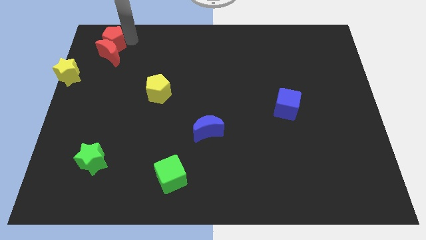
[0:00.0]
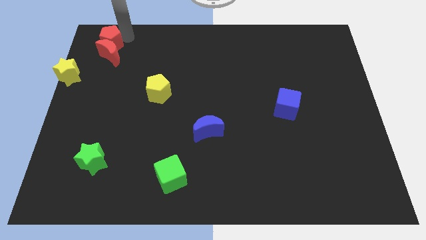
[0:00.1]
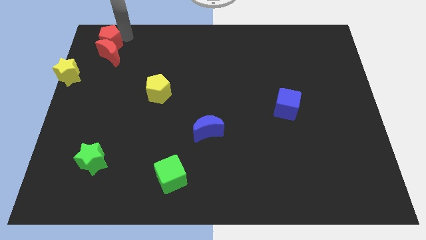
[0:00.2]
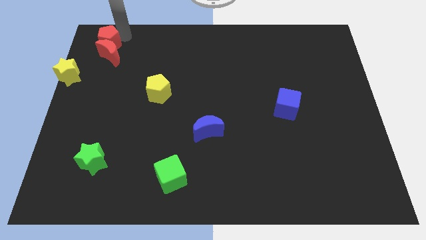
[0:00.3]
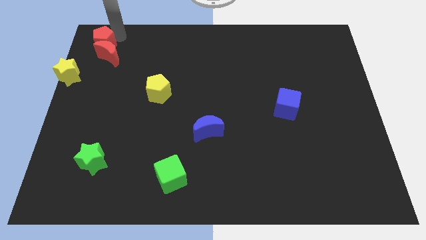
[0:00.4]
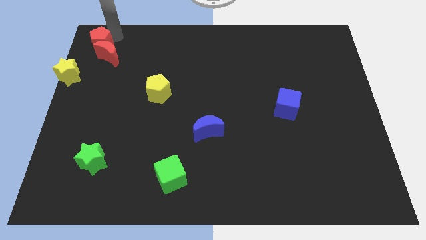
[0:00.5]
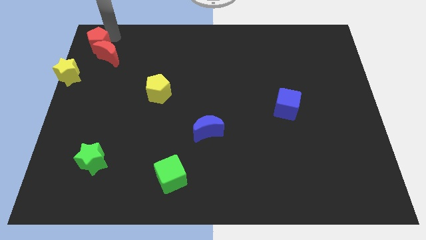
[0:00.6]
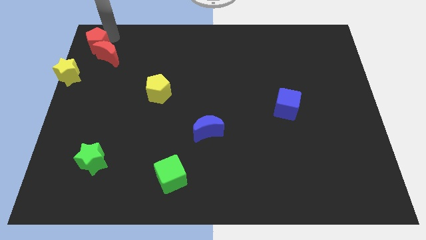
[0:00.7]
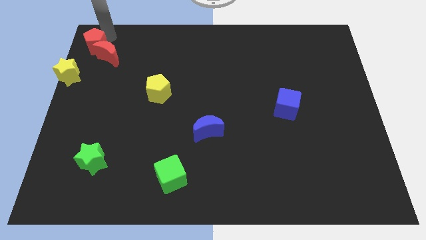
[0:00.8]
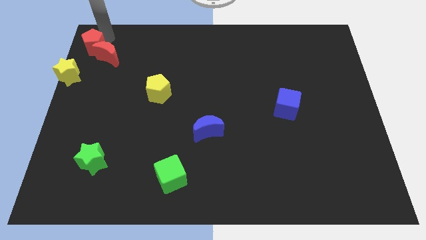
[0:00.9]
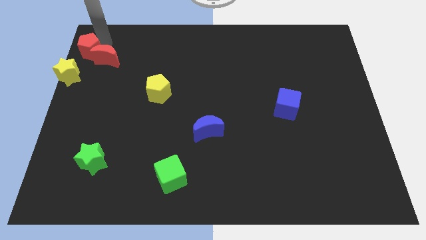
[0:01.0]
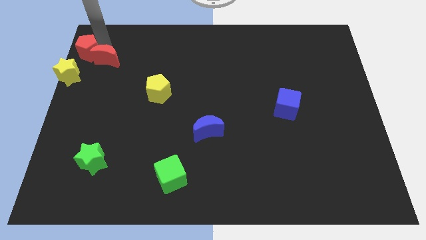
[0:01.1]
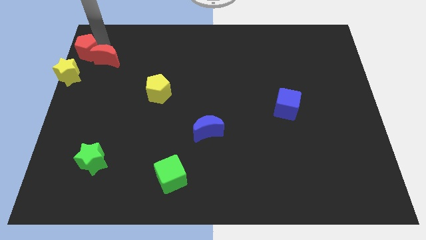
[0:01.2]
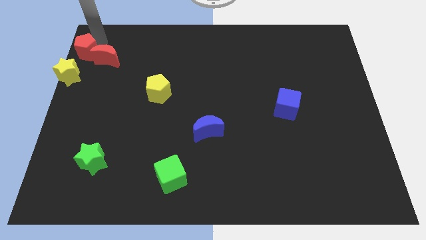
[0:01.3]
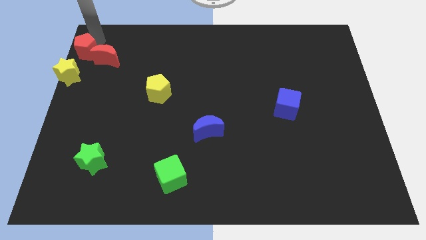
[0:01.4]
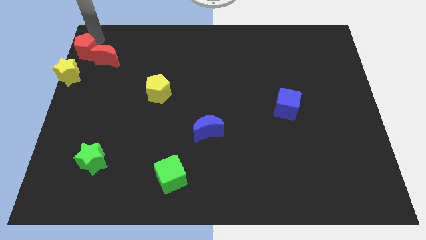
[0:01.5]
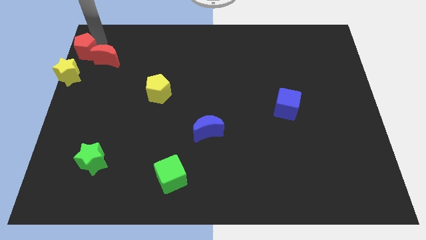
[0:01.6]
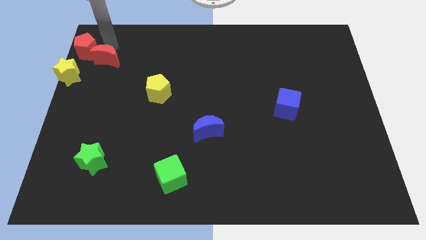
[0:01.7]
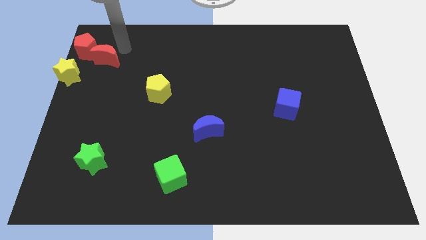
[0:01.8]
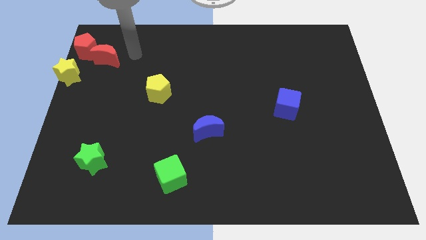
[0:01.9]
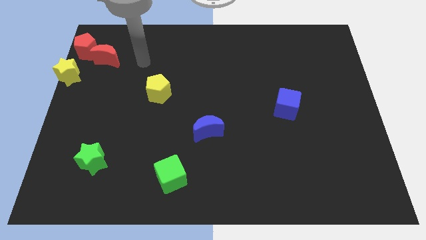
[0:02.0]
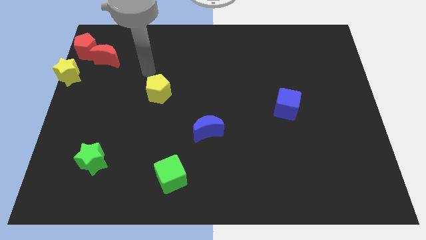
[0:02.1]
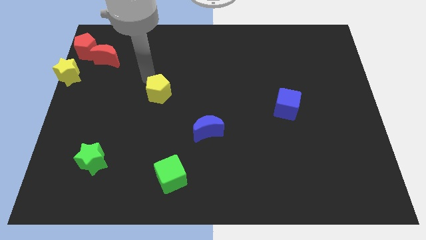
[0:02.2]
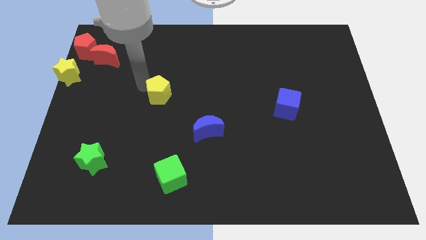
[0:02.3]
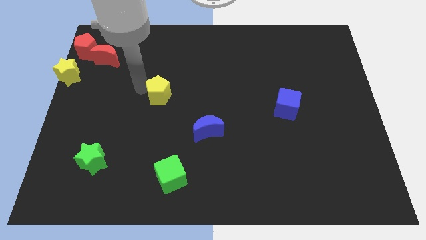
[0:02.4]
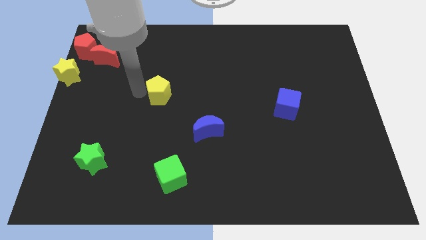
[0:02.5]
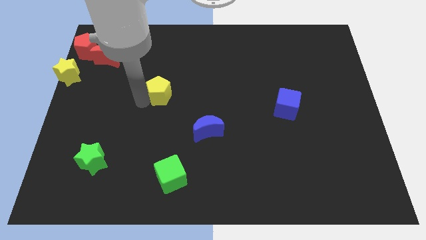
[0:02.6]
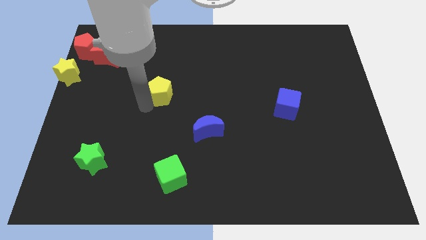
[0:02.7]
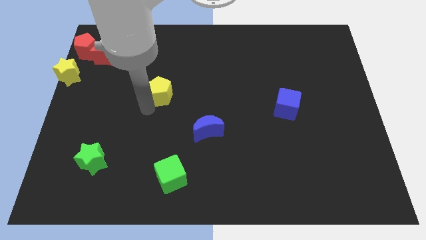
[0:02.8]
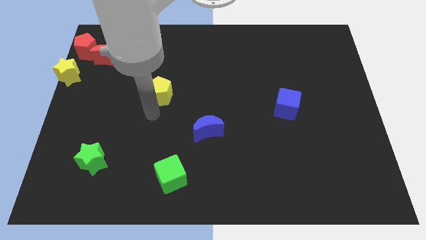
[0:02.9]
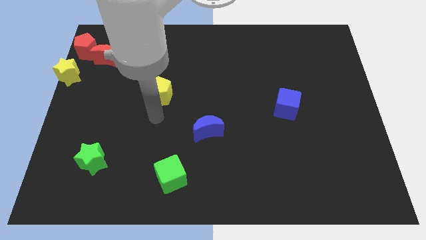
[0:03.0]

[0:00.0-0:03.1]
move the red pentagon to the top left corner of the board

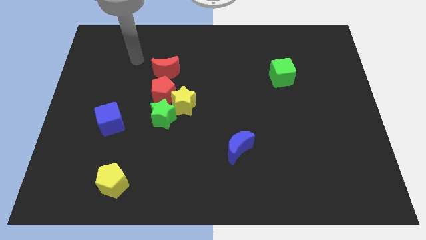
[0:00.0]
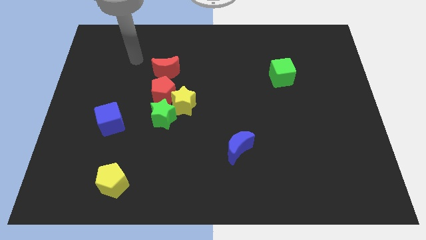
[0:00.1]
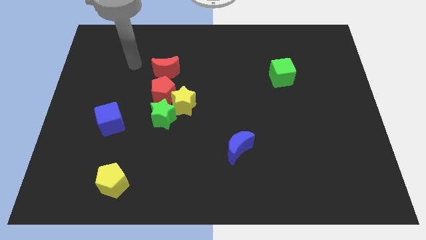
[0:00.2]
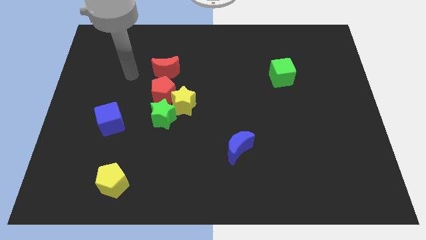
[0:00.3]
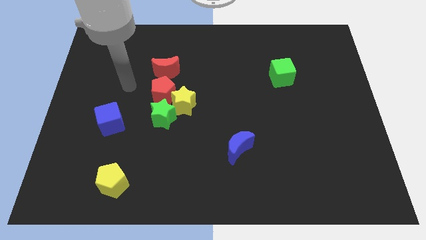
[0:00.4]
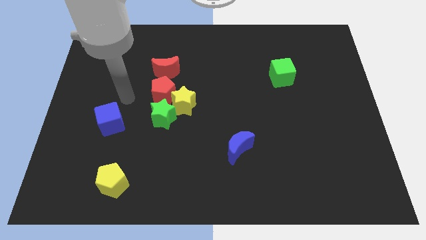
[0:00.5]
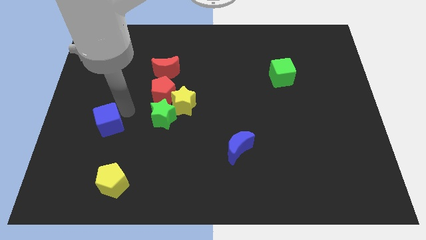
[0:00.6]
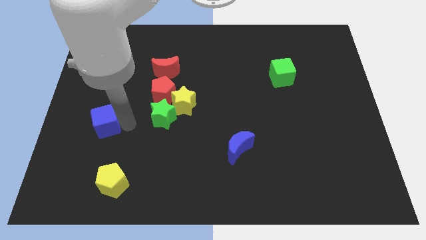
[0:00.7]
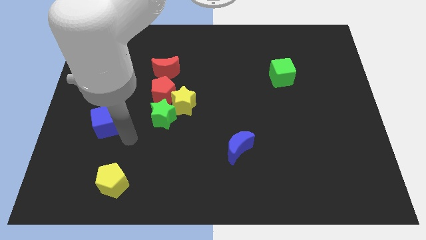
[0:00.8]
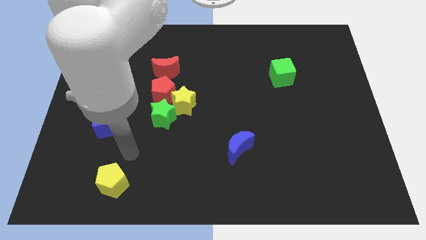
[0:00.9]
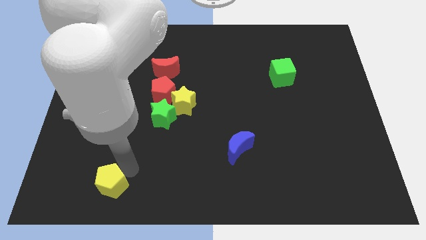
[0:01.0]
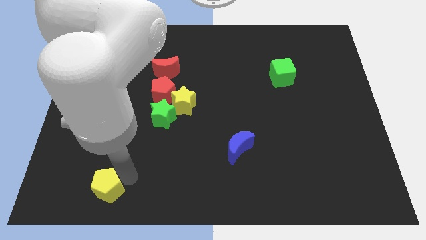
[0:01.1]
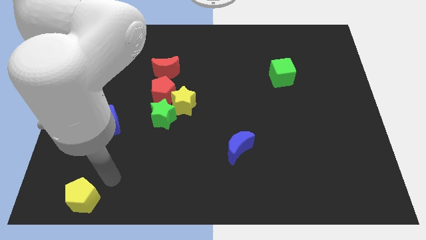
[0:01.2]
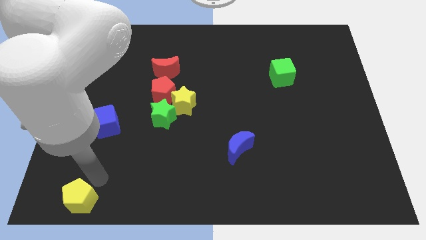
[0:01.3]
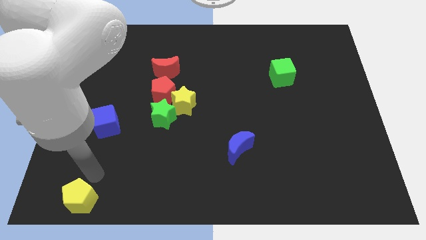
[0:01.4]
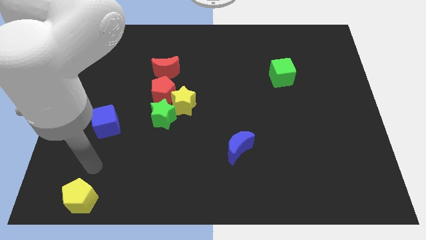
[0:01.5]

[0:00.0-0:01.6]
place the yellow pentagon at the bottom left

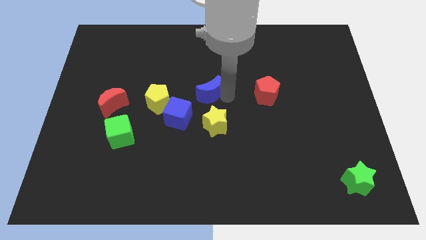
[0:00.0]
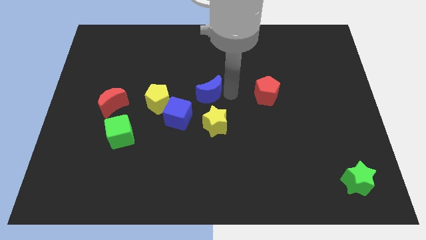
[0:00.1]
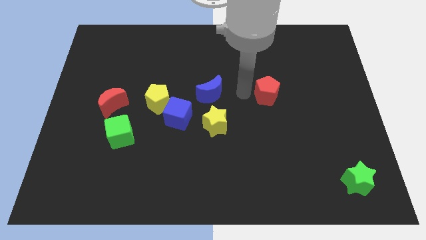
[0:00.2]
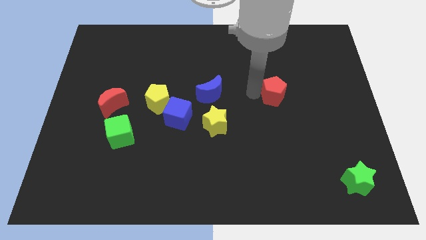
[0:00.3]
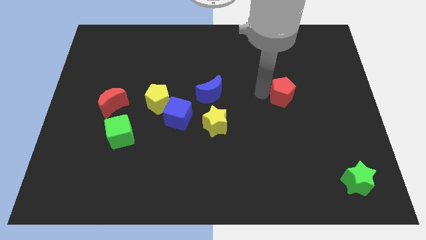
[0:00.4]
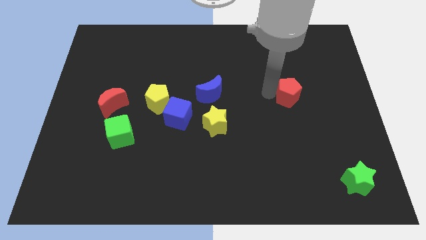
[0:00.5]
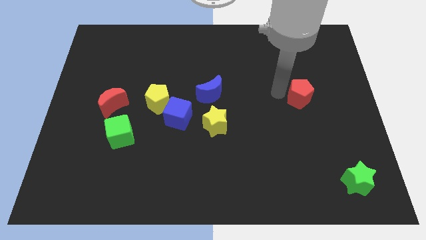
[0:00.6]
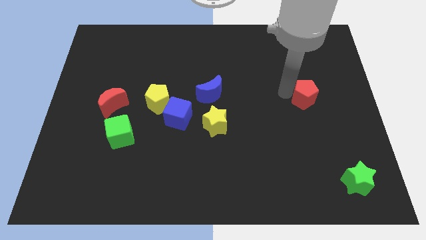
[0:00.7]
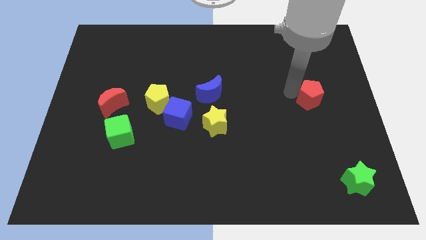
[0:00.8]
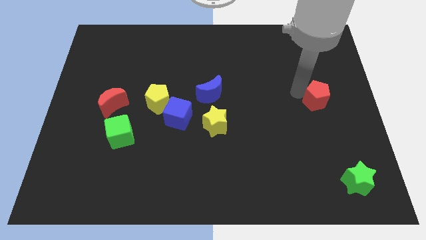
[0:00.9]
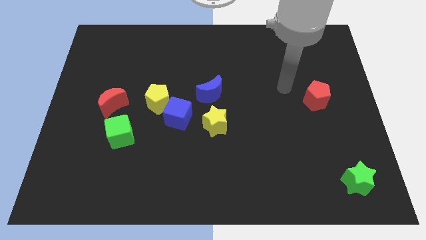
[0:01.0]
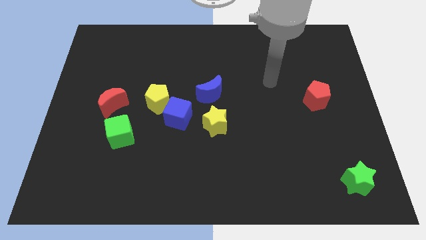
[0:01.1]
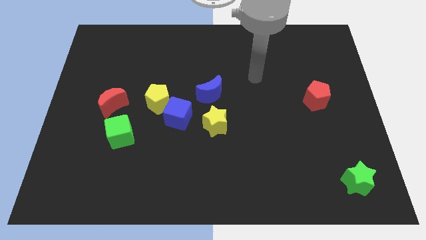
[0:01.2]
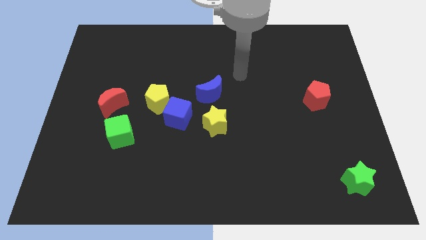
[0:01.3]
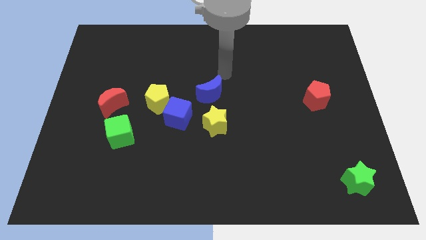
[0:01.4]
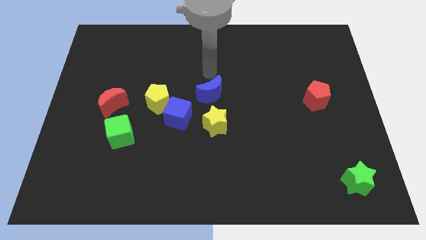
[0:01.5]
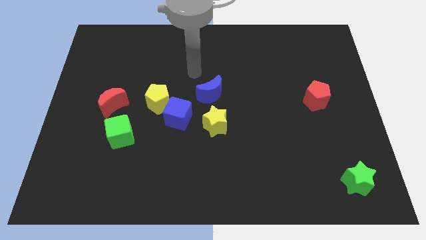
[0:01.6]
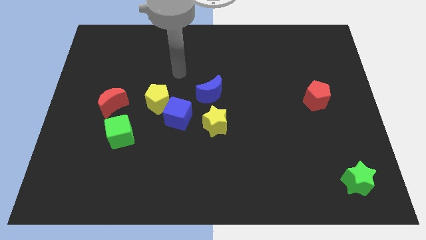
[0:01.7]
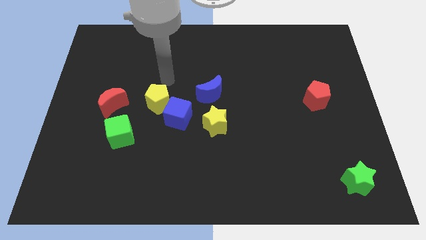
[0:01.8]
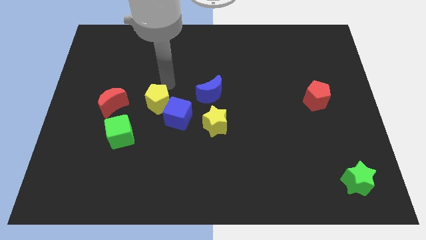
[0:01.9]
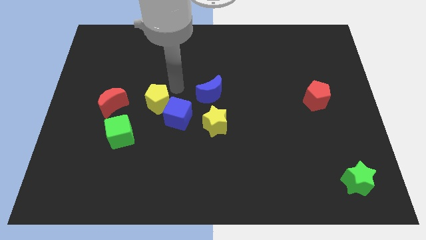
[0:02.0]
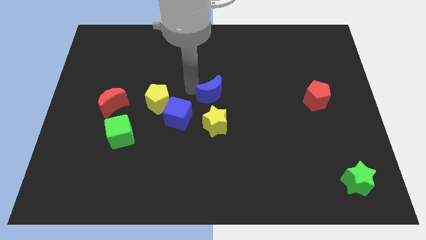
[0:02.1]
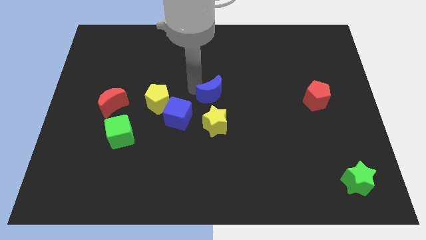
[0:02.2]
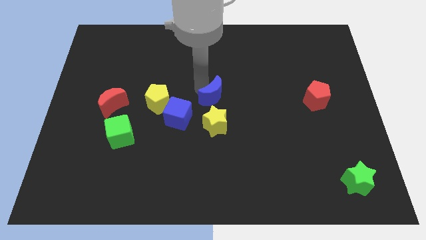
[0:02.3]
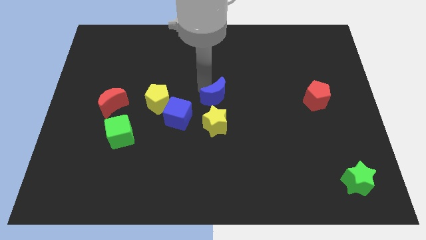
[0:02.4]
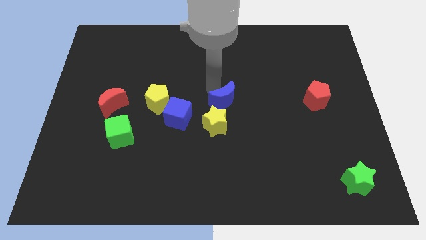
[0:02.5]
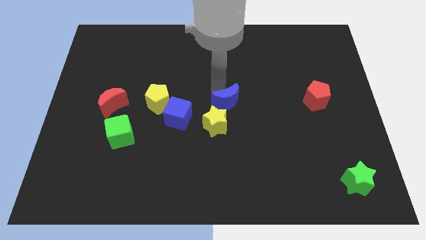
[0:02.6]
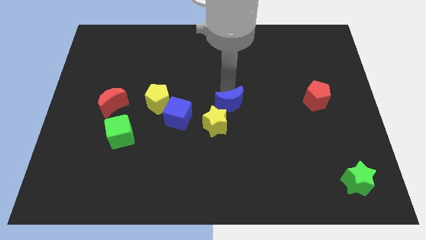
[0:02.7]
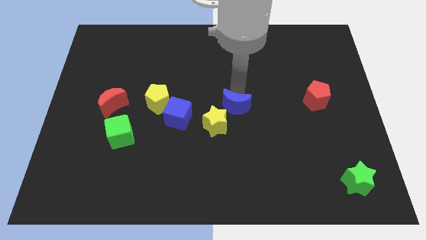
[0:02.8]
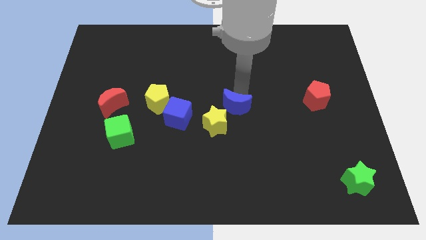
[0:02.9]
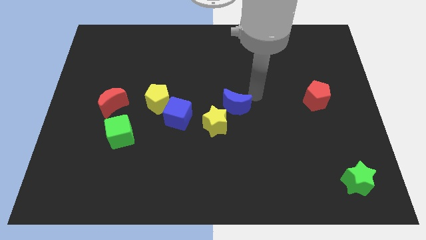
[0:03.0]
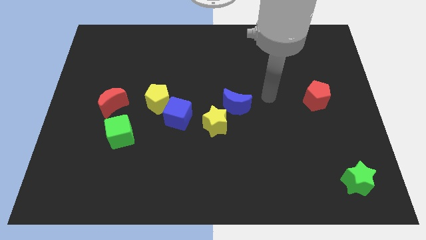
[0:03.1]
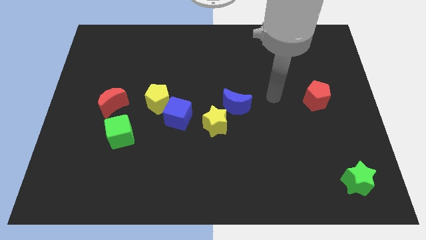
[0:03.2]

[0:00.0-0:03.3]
move the red pentagon towards right center of the board

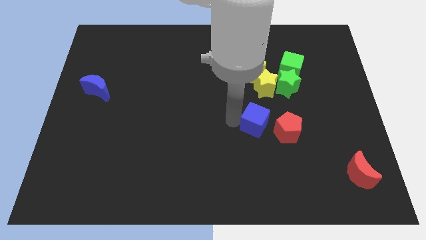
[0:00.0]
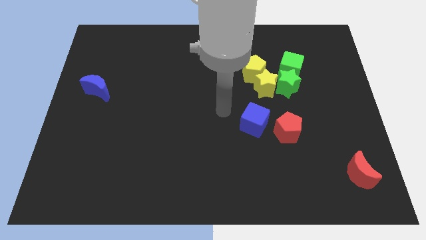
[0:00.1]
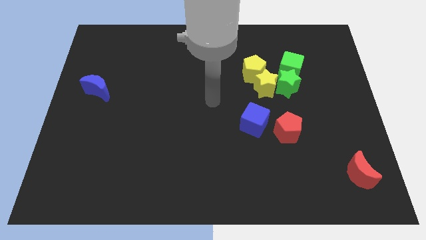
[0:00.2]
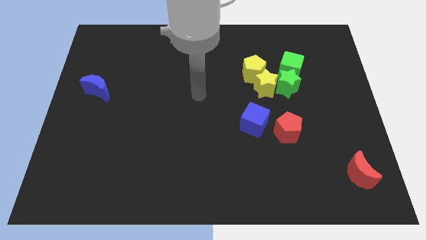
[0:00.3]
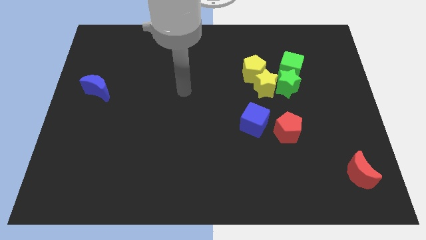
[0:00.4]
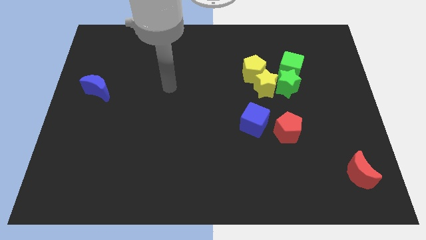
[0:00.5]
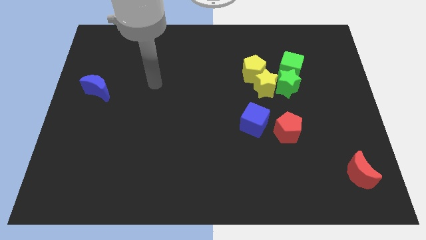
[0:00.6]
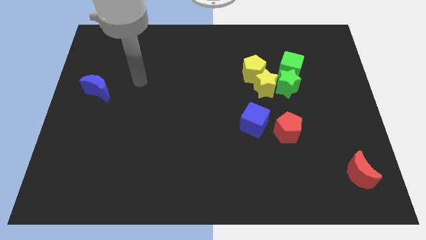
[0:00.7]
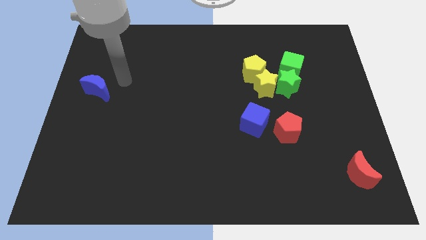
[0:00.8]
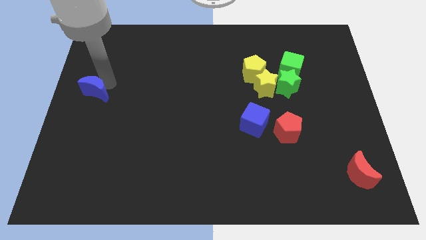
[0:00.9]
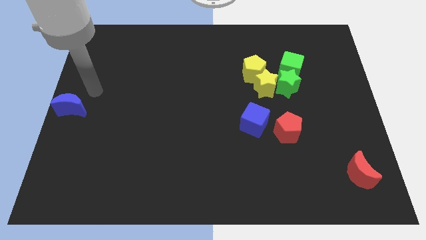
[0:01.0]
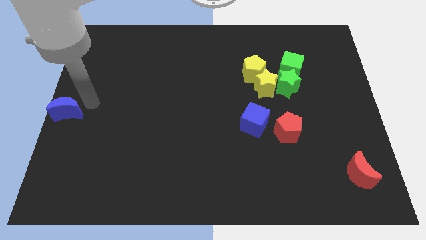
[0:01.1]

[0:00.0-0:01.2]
move blue moon to the left center of the board
